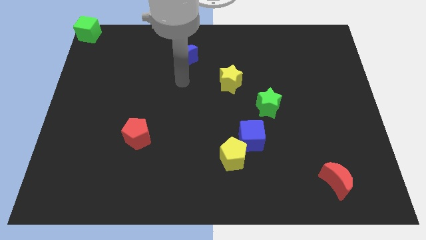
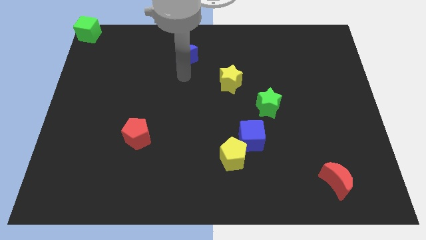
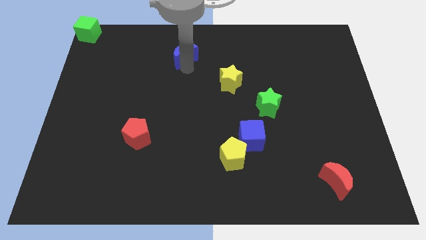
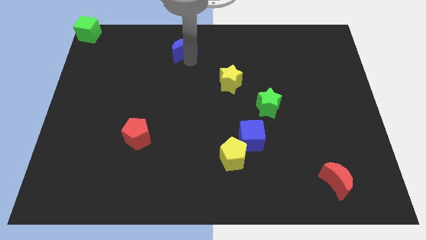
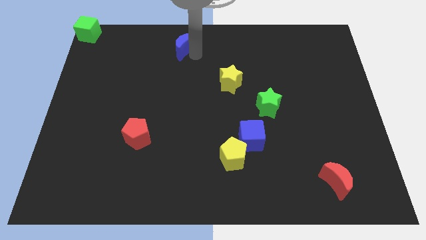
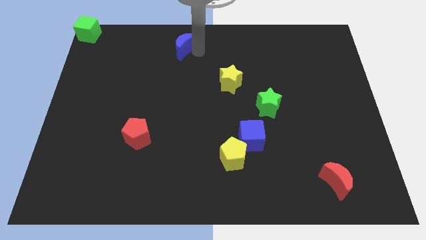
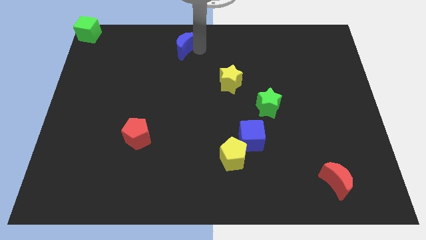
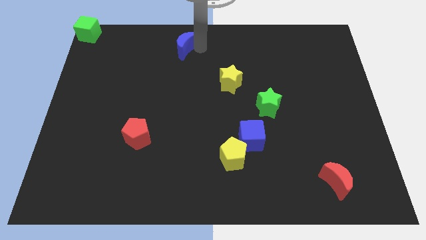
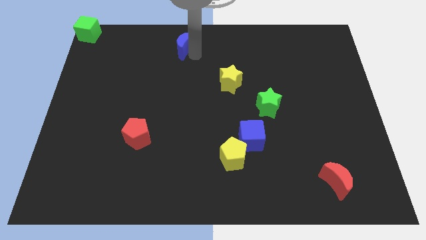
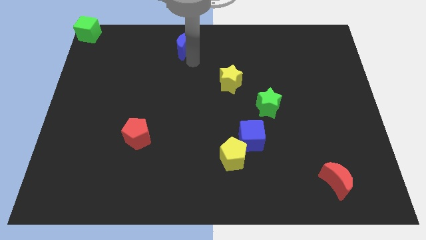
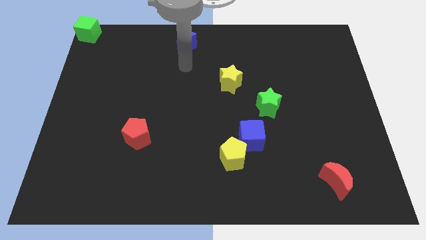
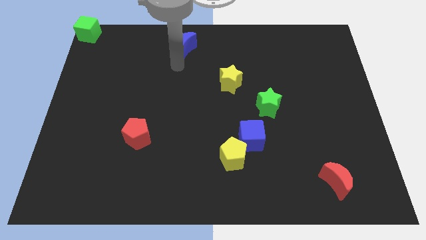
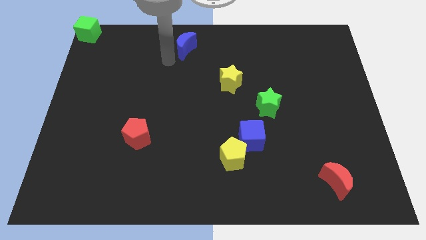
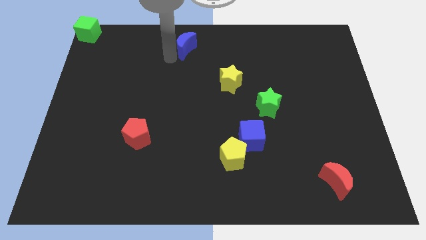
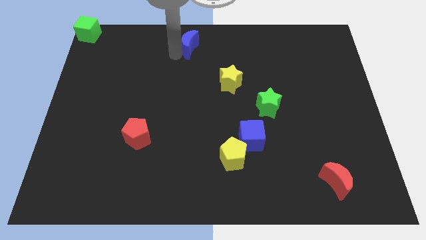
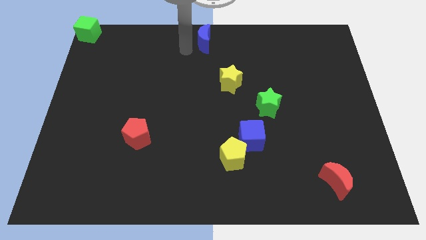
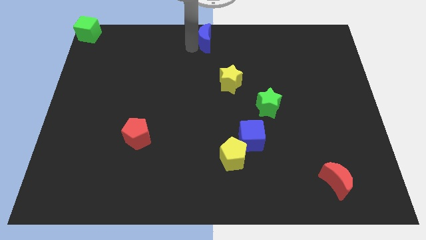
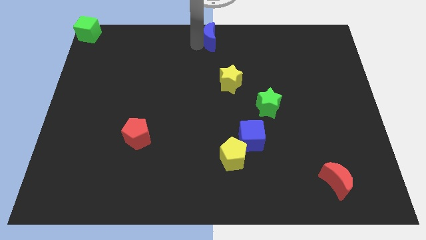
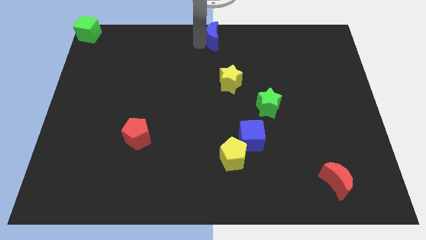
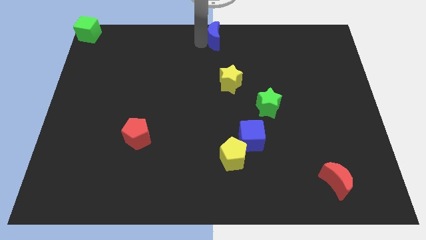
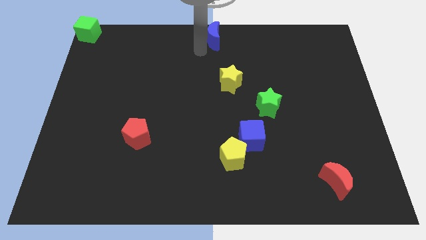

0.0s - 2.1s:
place the blue moon at the top center of the board

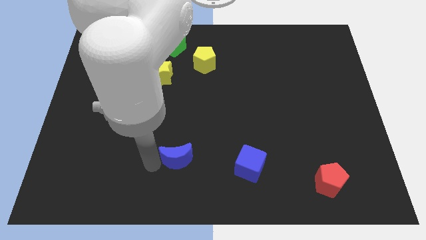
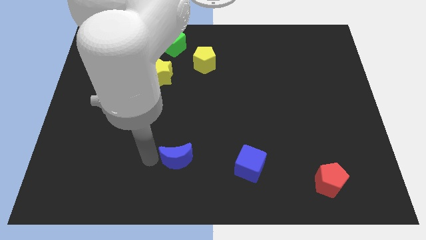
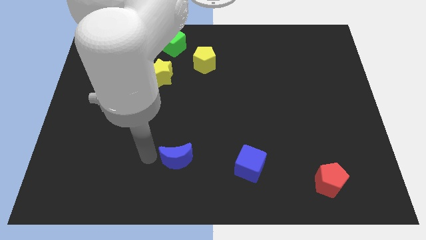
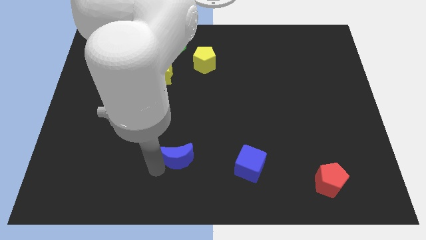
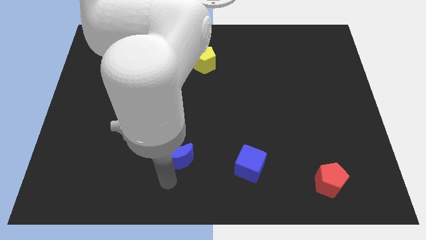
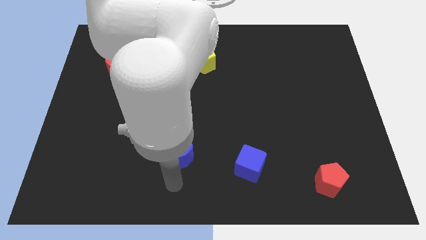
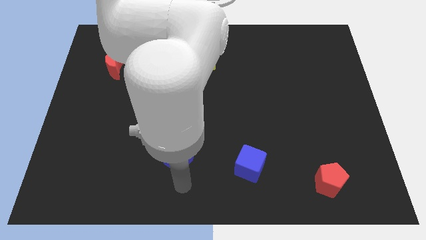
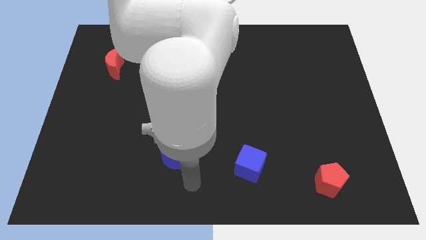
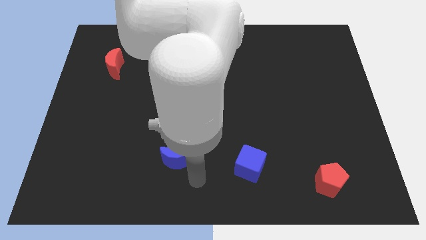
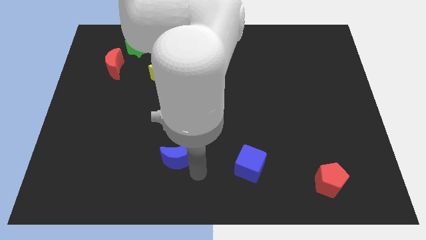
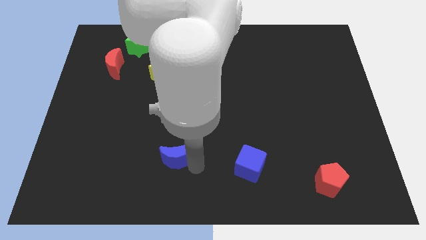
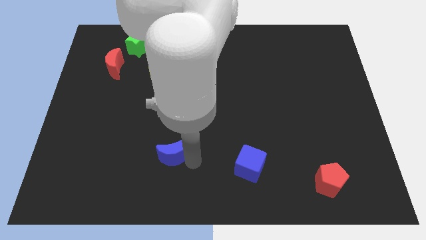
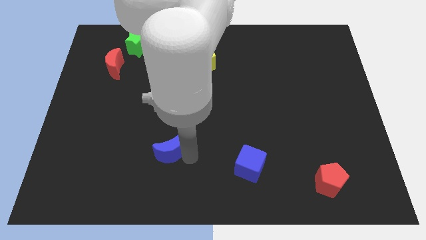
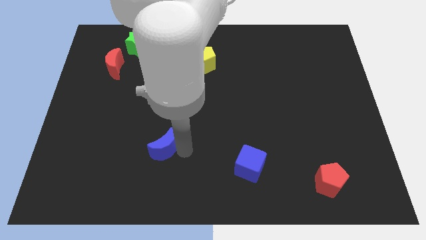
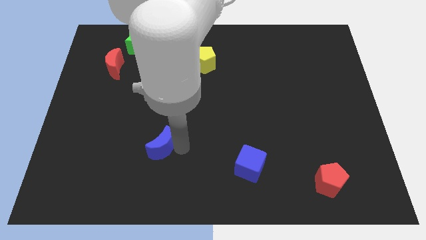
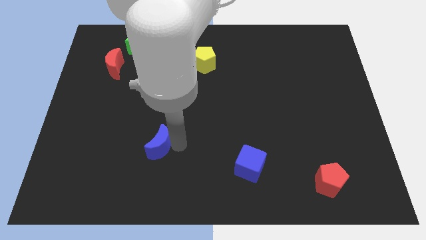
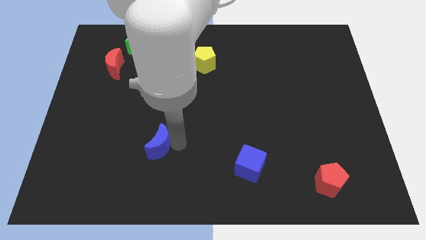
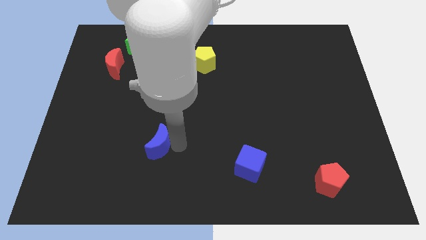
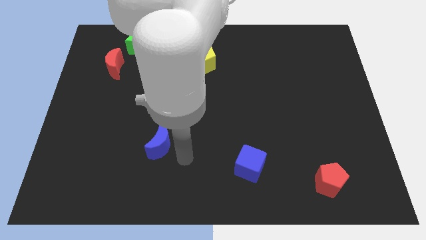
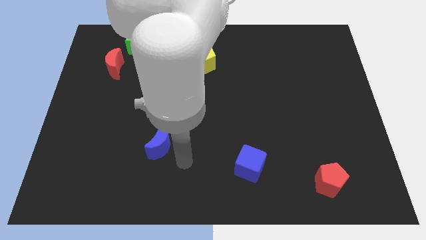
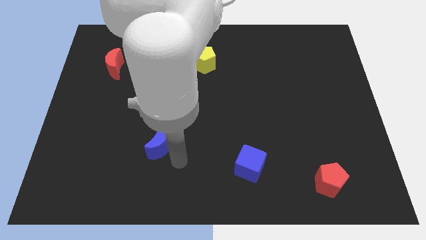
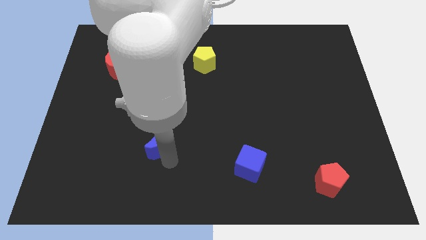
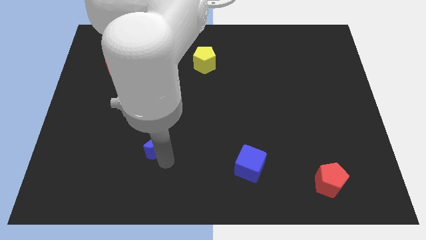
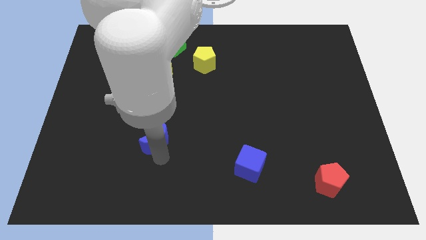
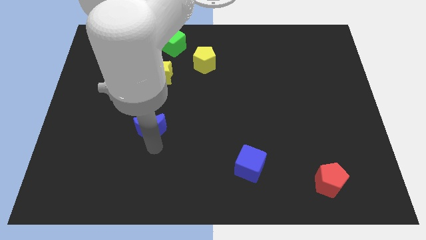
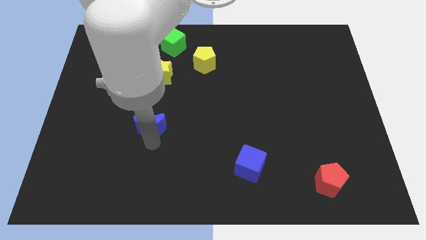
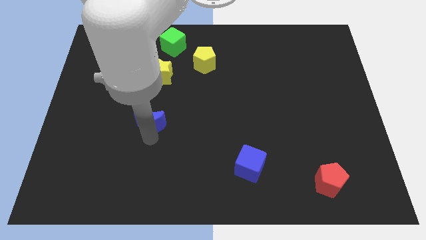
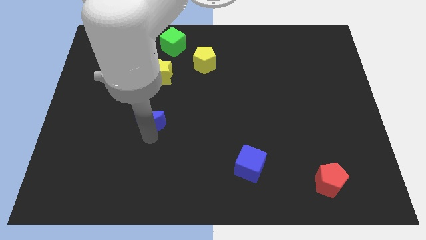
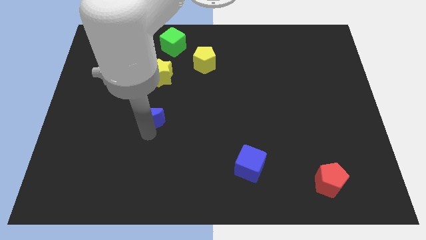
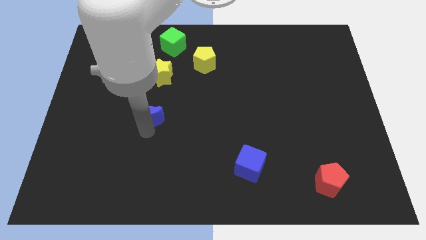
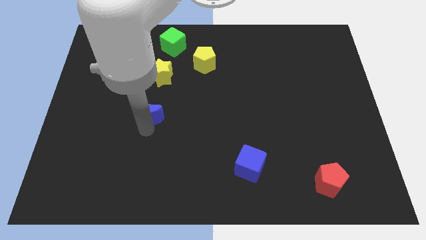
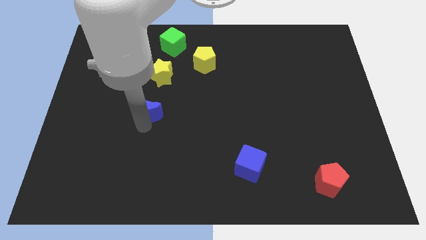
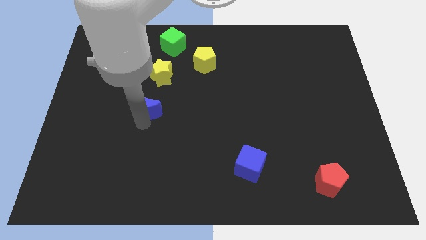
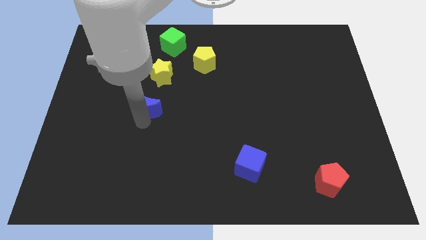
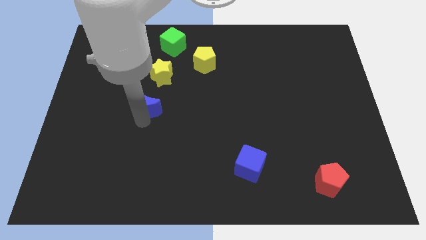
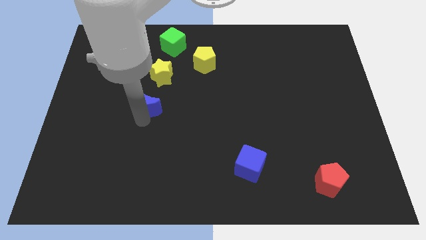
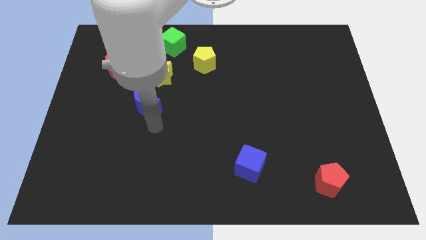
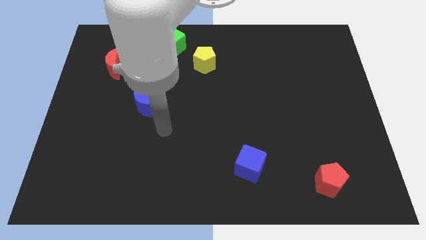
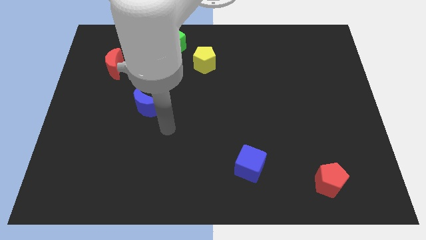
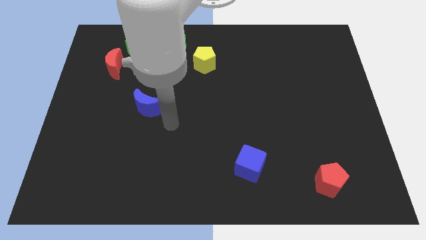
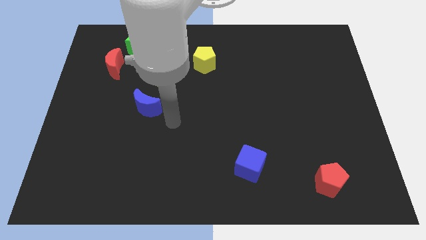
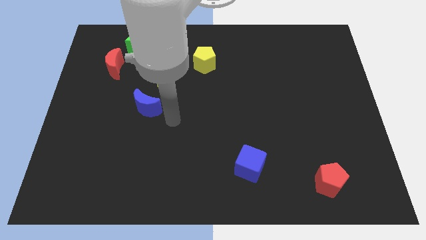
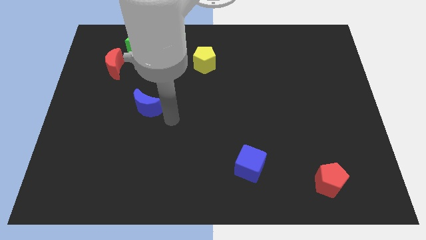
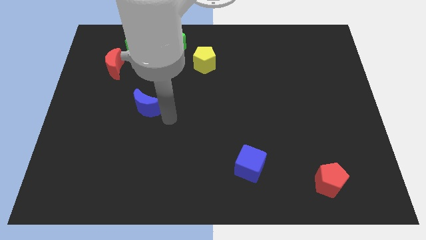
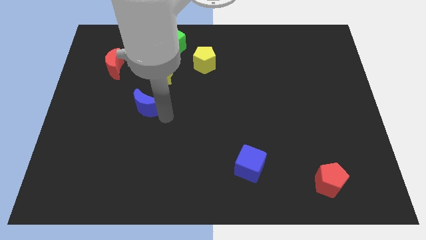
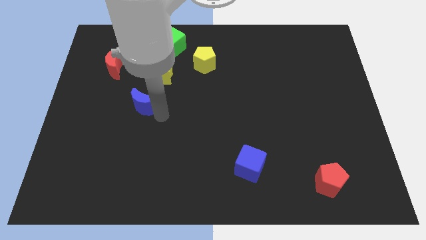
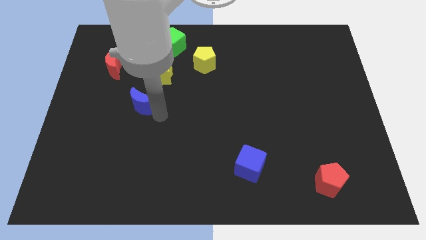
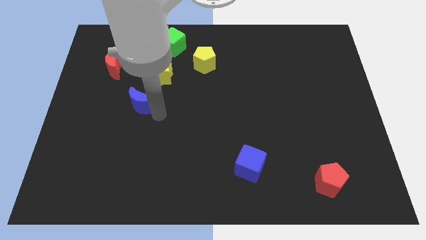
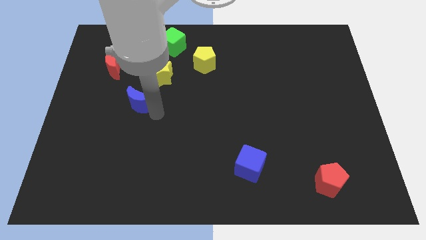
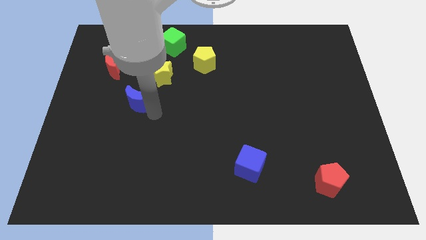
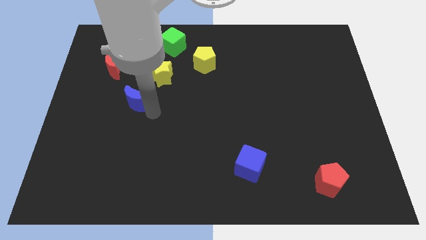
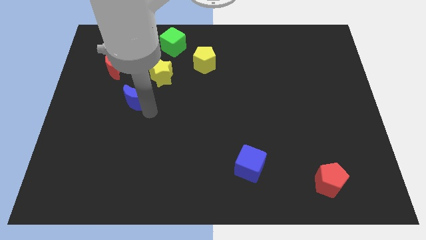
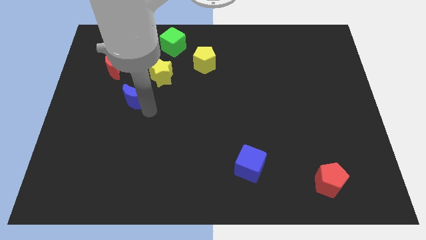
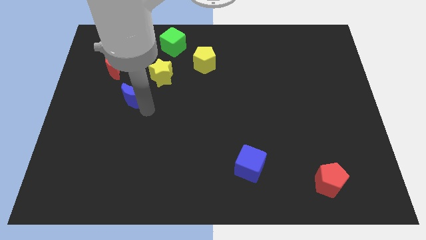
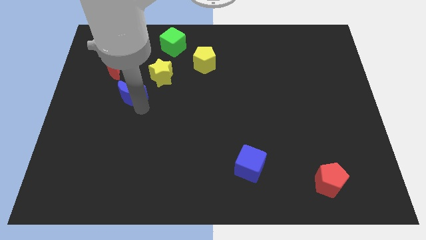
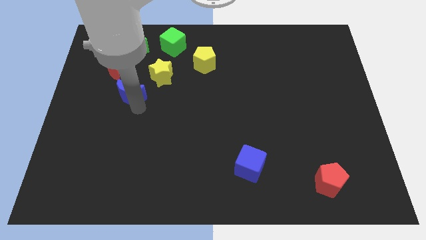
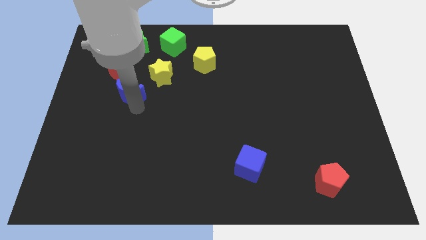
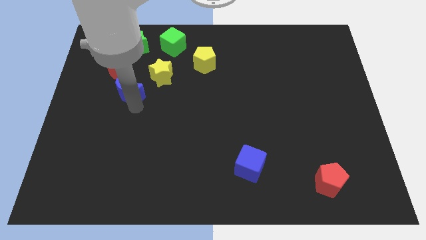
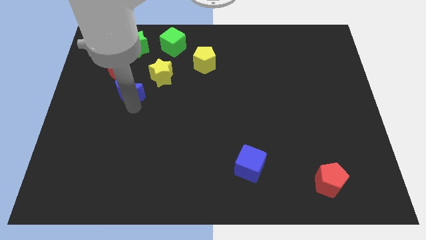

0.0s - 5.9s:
move the blue crescent below the red crescent

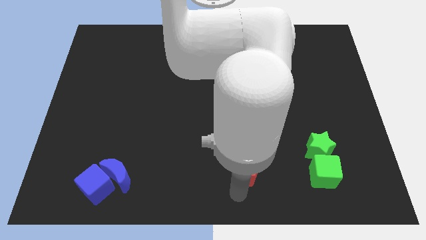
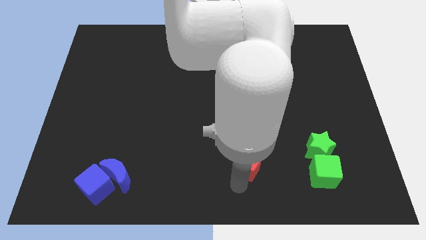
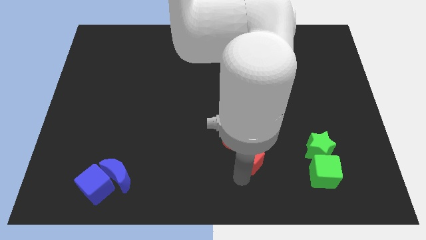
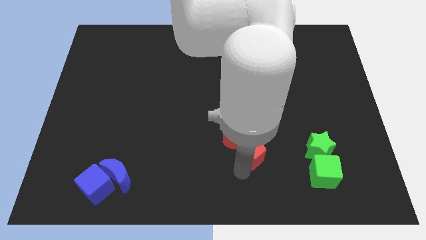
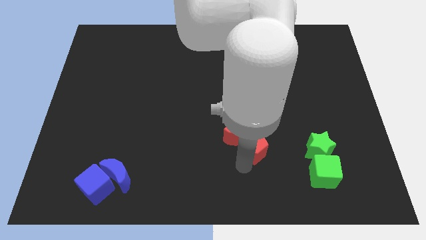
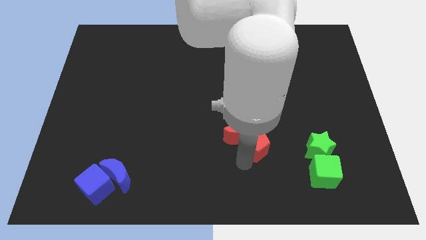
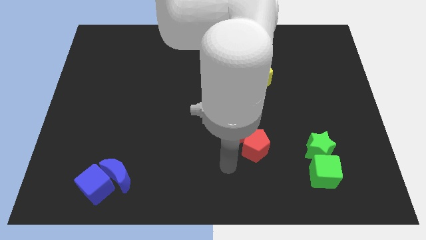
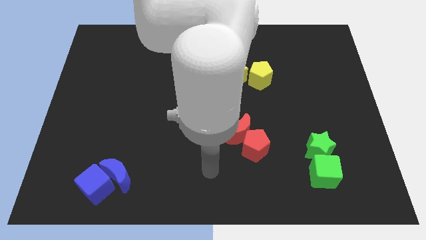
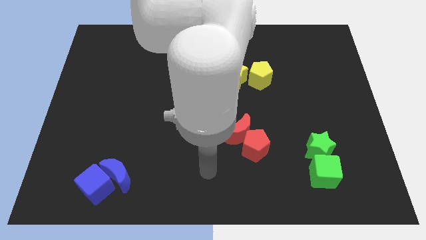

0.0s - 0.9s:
put the red pentagon and red moon together
